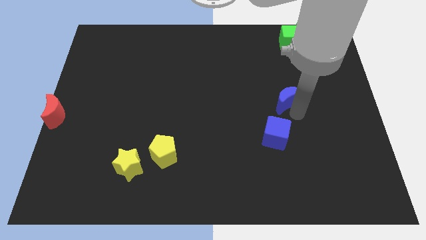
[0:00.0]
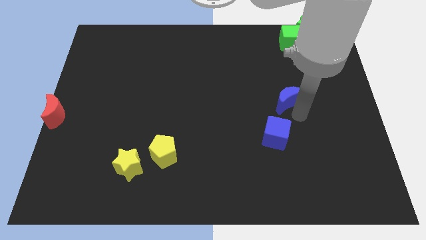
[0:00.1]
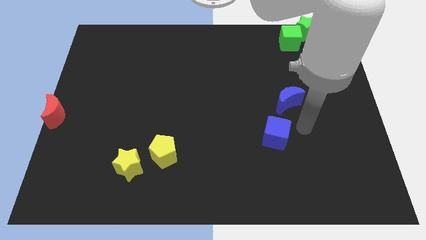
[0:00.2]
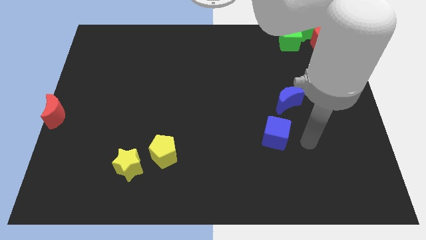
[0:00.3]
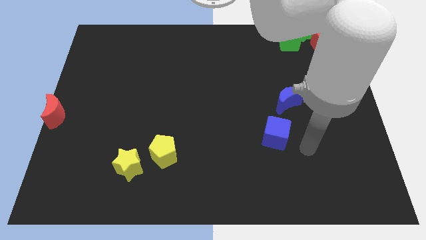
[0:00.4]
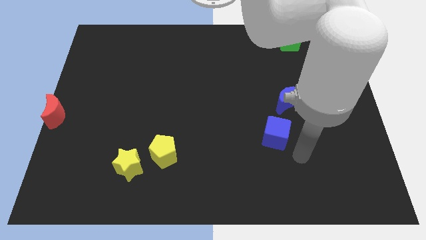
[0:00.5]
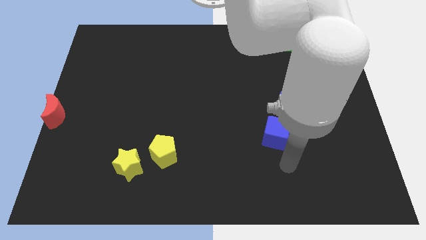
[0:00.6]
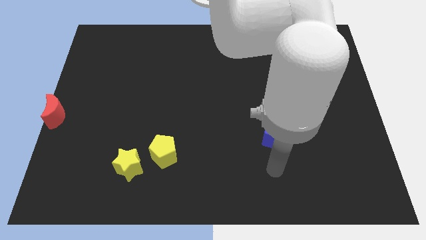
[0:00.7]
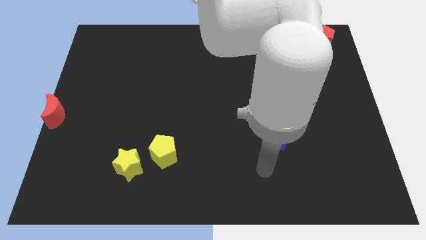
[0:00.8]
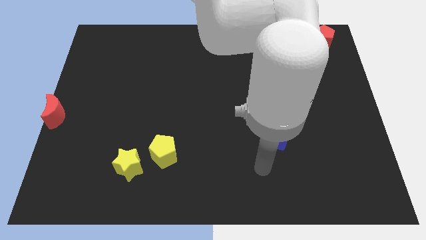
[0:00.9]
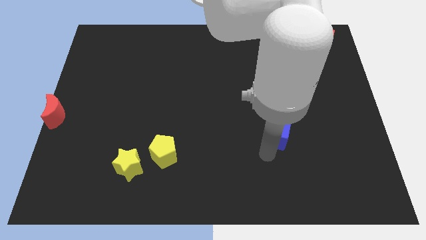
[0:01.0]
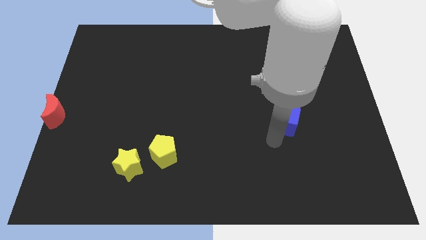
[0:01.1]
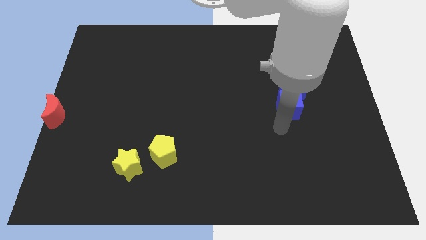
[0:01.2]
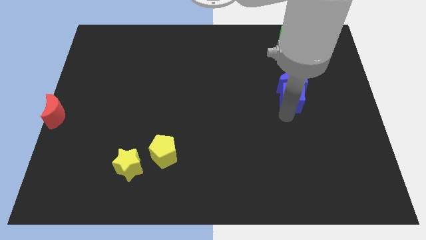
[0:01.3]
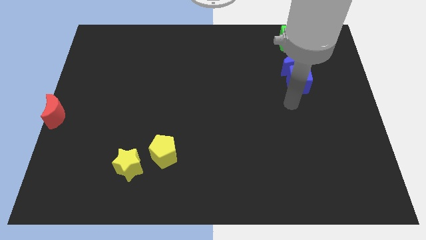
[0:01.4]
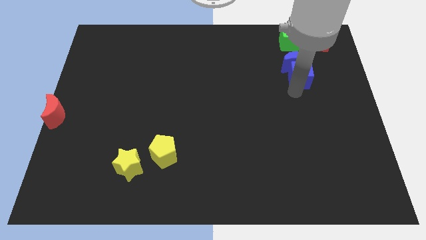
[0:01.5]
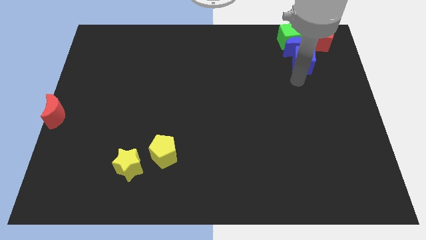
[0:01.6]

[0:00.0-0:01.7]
push the blue blocks into the green cube

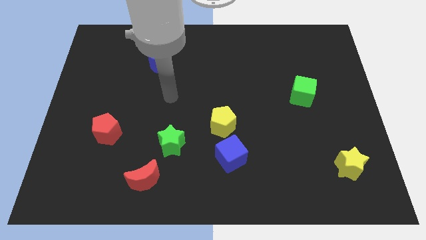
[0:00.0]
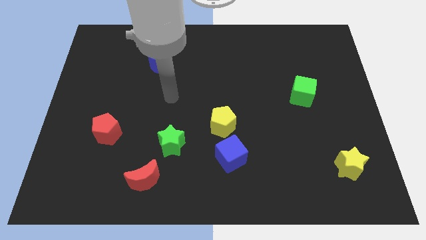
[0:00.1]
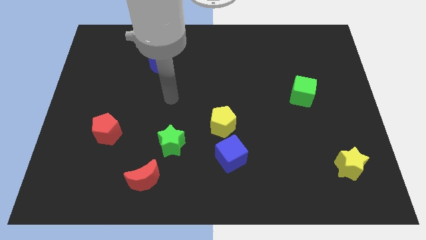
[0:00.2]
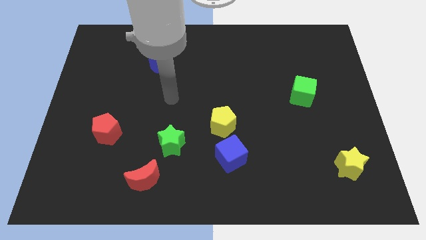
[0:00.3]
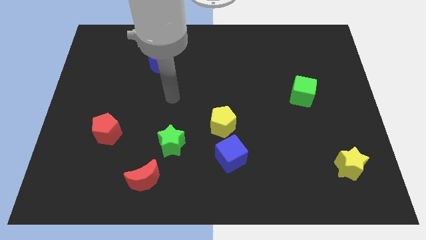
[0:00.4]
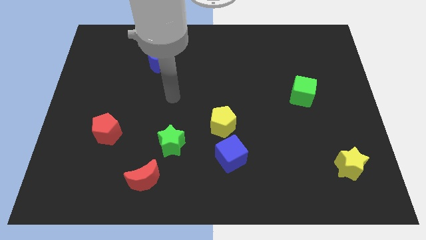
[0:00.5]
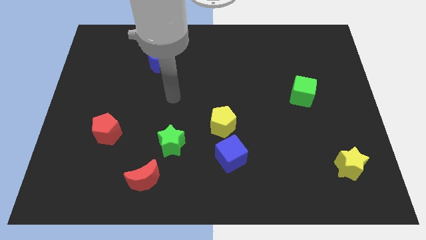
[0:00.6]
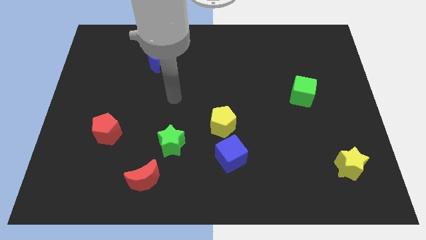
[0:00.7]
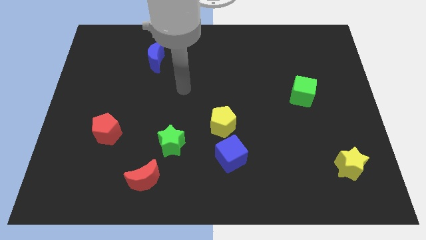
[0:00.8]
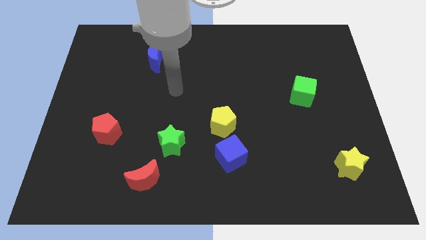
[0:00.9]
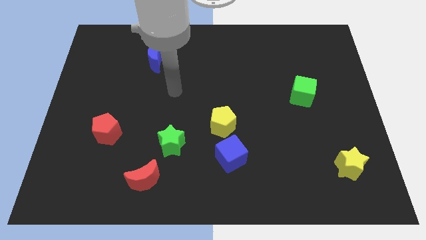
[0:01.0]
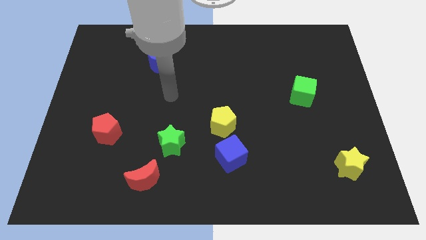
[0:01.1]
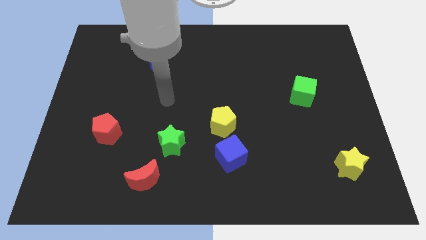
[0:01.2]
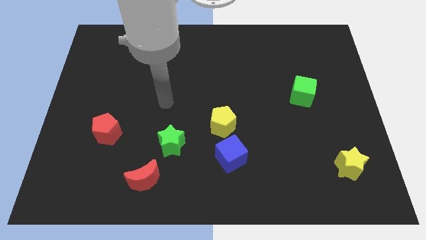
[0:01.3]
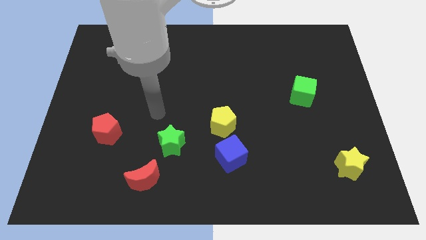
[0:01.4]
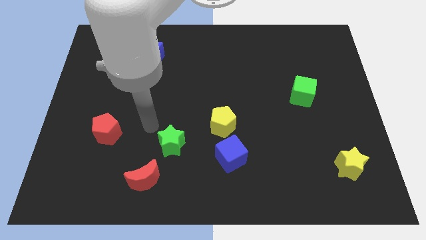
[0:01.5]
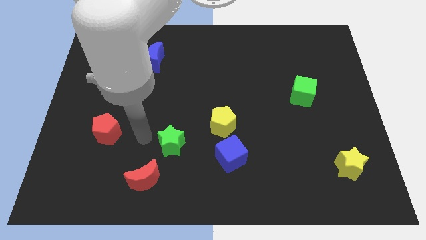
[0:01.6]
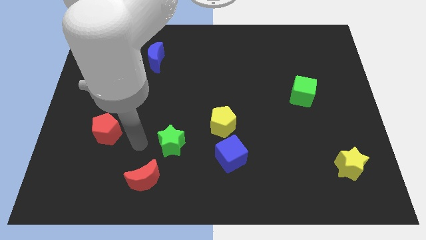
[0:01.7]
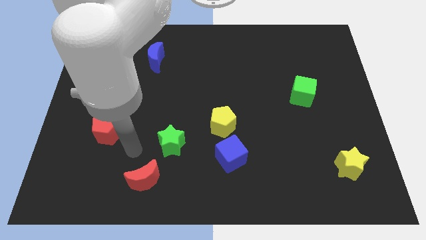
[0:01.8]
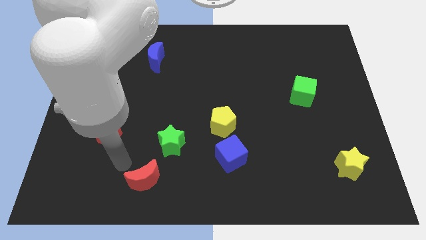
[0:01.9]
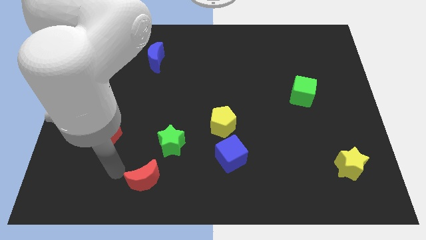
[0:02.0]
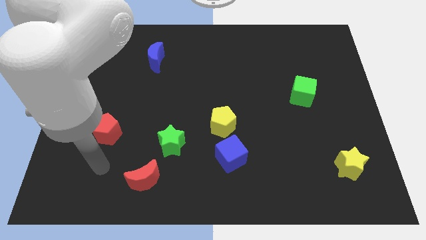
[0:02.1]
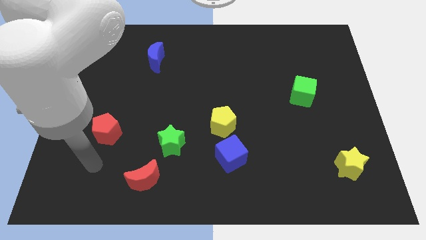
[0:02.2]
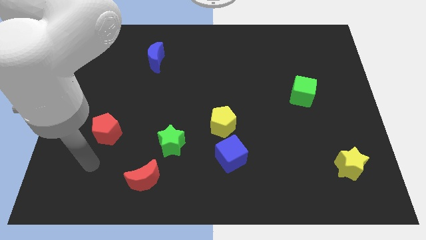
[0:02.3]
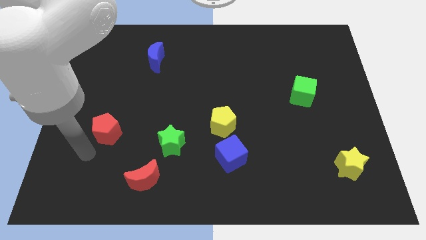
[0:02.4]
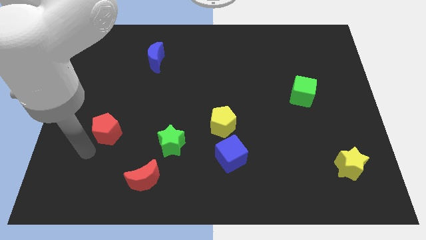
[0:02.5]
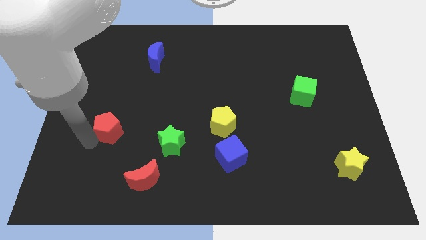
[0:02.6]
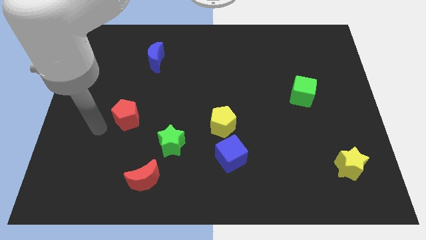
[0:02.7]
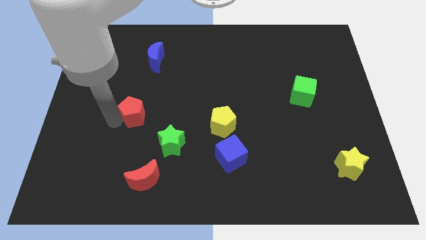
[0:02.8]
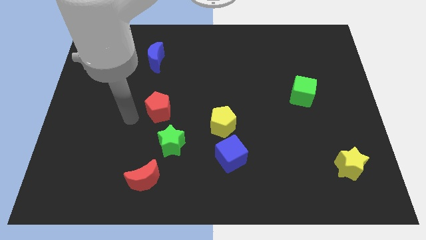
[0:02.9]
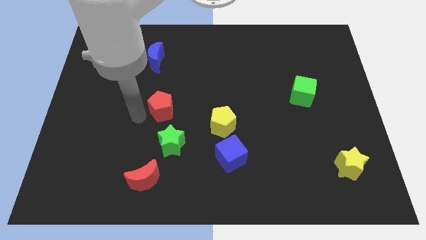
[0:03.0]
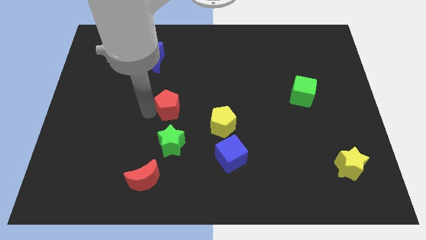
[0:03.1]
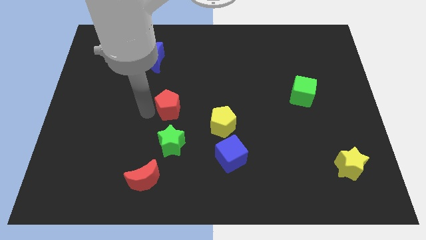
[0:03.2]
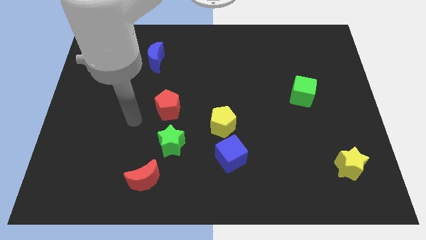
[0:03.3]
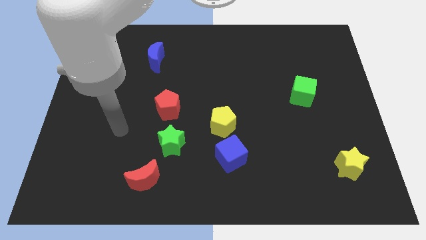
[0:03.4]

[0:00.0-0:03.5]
place the red pentagon top left of the green star

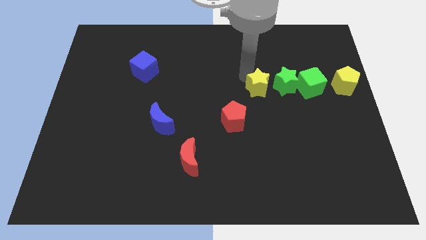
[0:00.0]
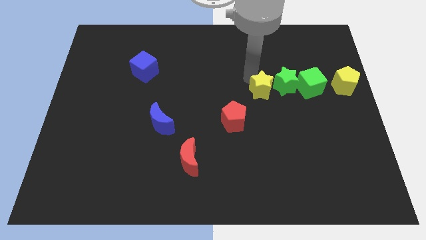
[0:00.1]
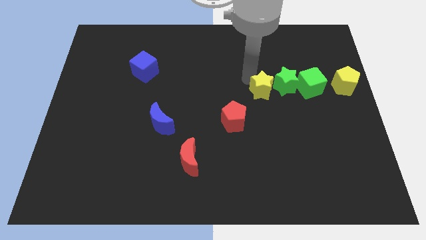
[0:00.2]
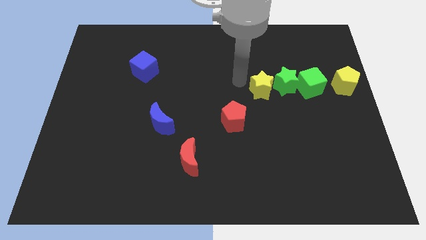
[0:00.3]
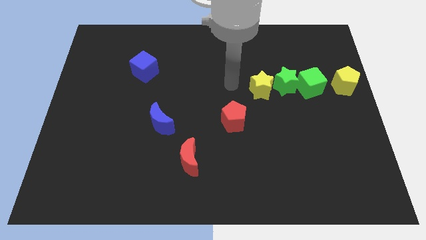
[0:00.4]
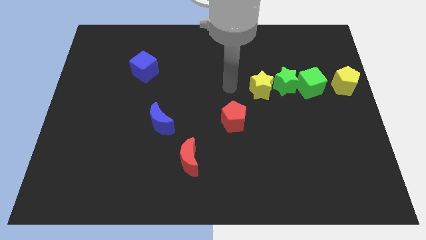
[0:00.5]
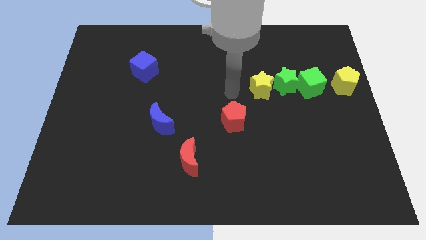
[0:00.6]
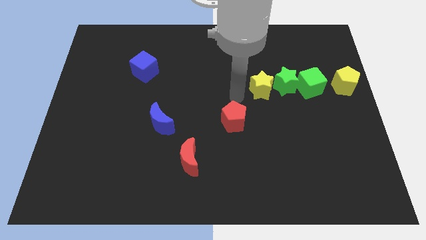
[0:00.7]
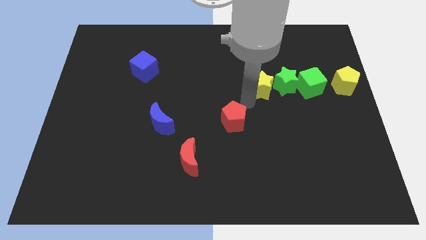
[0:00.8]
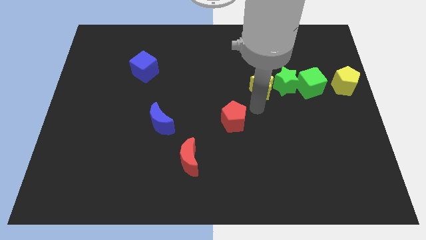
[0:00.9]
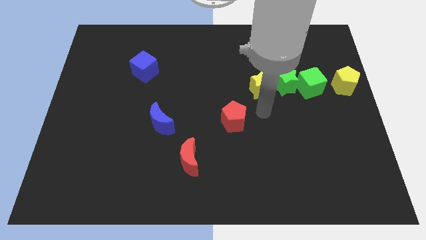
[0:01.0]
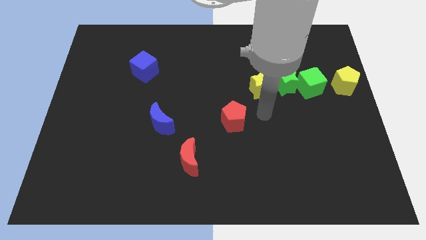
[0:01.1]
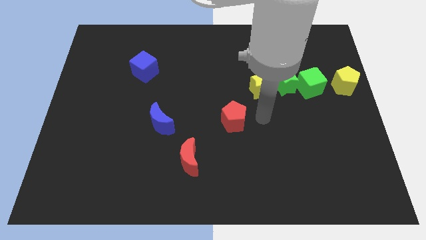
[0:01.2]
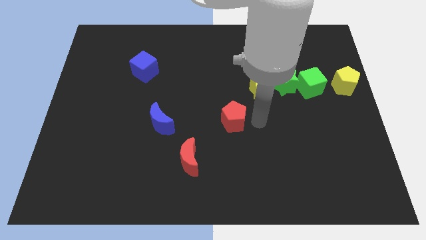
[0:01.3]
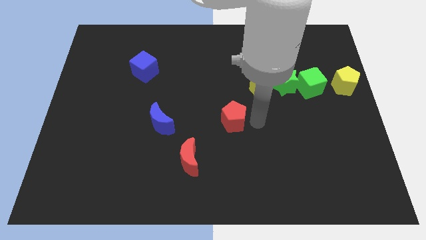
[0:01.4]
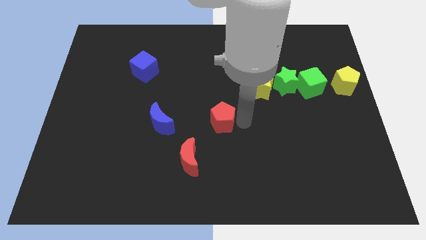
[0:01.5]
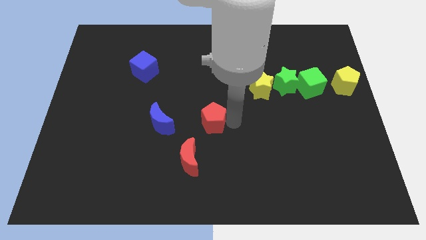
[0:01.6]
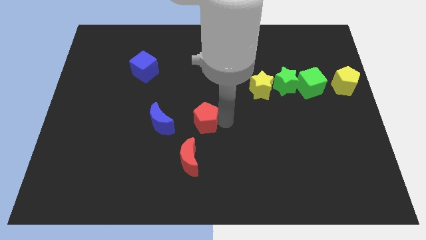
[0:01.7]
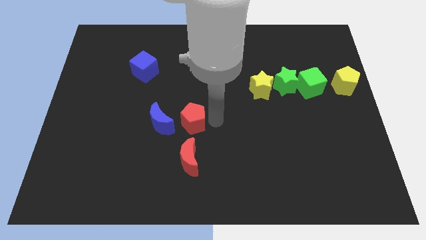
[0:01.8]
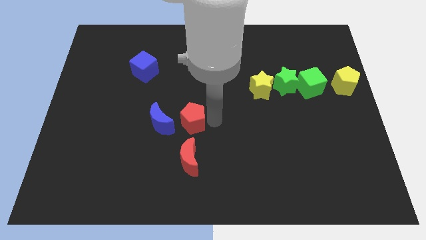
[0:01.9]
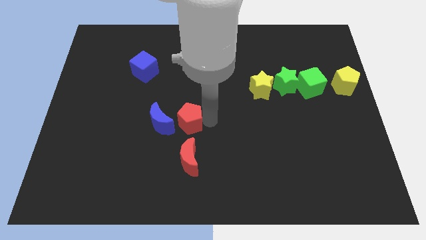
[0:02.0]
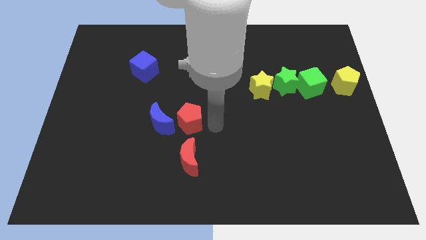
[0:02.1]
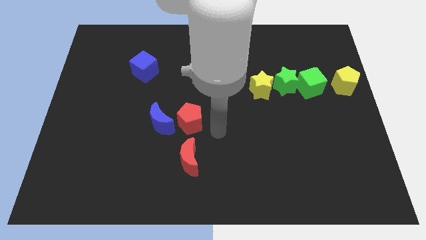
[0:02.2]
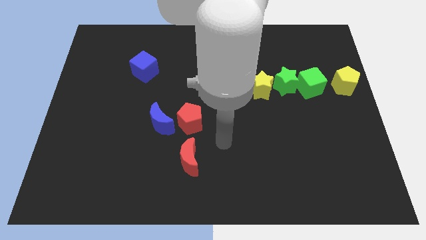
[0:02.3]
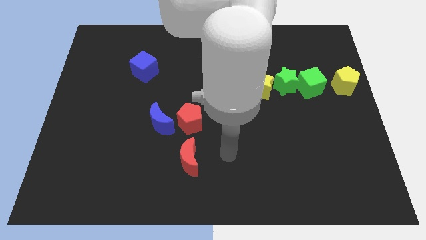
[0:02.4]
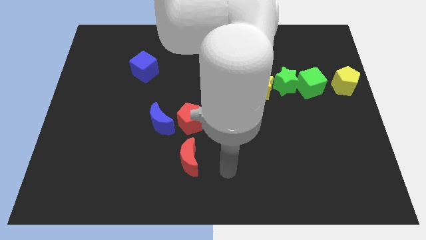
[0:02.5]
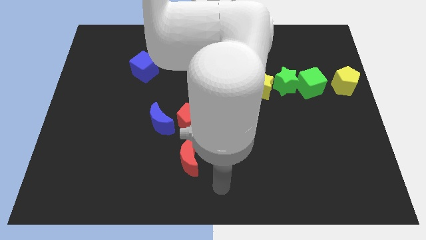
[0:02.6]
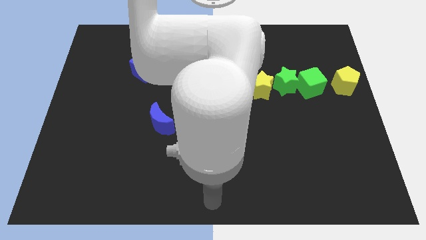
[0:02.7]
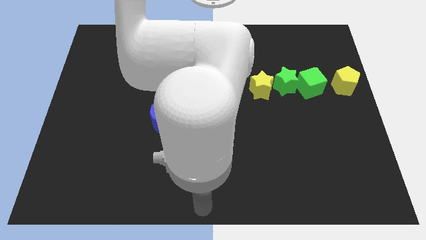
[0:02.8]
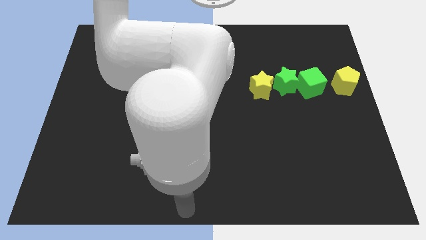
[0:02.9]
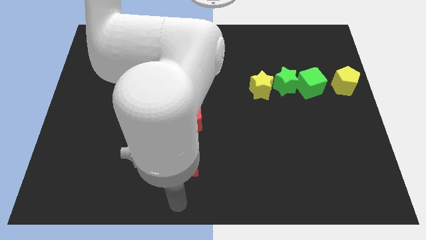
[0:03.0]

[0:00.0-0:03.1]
push the red pentagon right to the blue moon

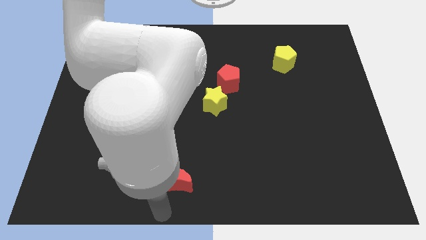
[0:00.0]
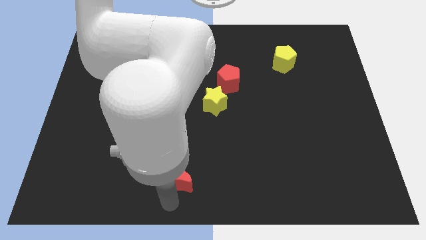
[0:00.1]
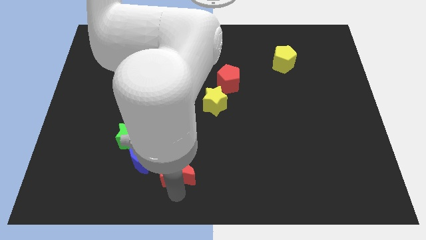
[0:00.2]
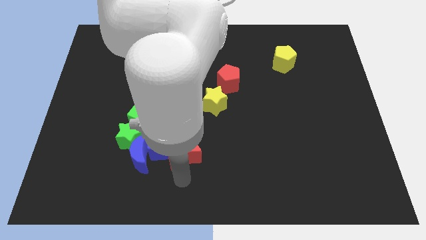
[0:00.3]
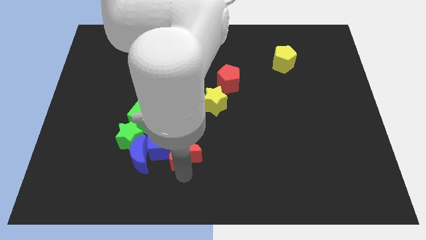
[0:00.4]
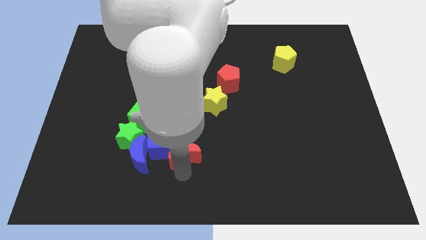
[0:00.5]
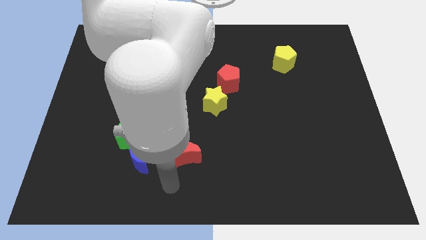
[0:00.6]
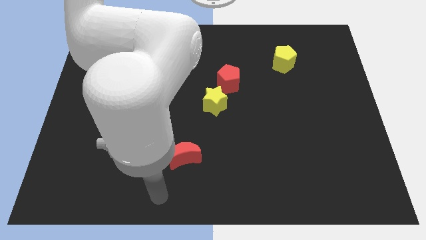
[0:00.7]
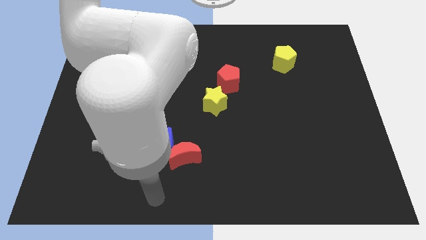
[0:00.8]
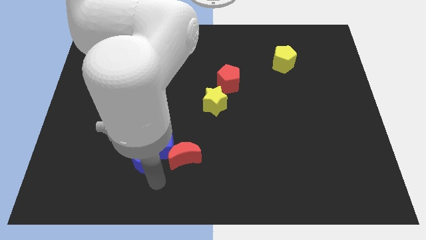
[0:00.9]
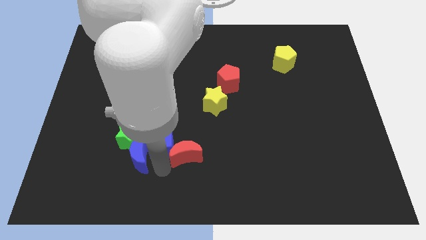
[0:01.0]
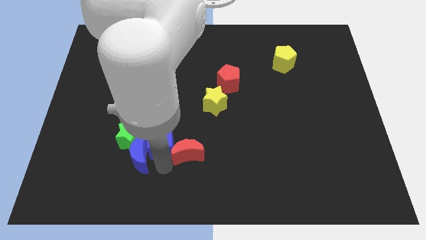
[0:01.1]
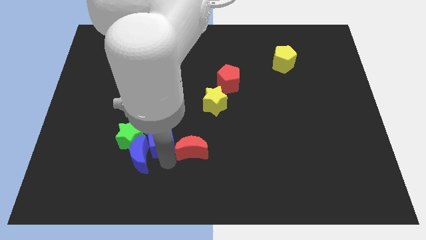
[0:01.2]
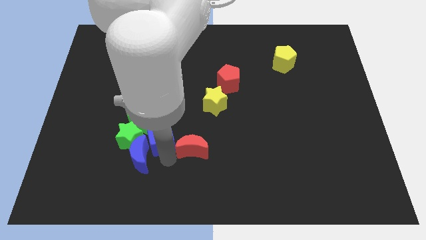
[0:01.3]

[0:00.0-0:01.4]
push the red moon to the right of the blue cube
